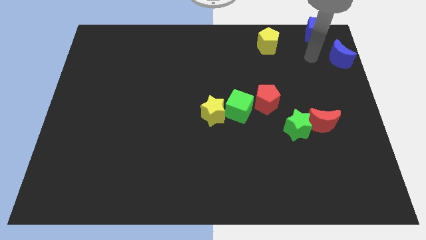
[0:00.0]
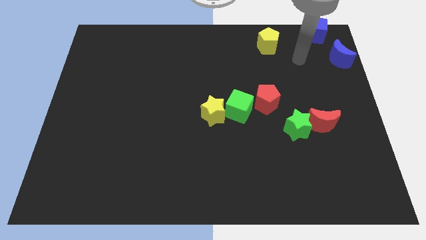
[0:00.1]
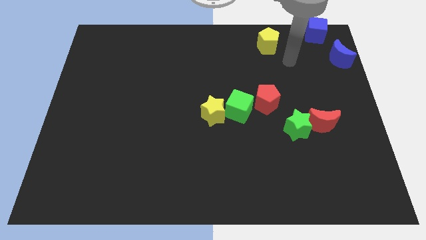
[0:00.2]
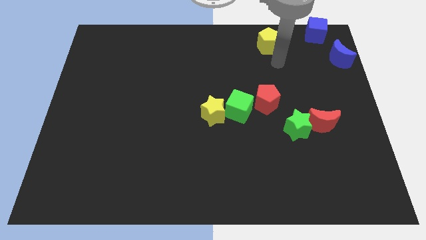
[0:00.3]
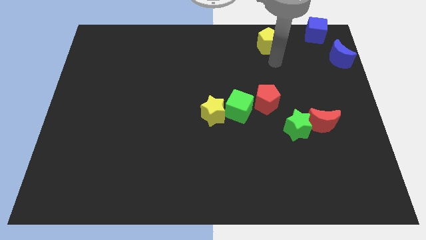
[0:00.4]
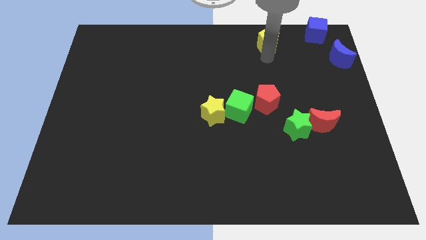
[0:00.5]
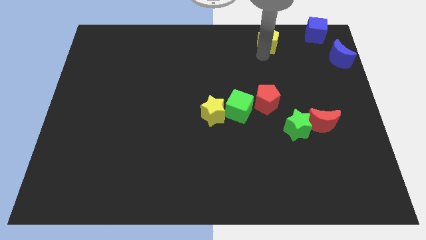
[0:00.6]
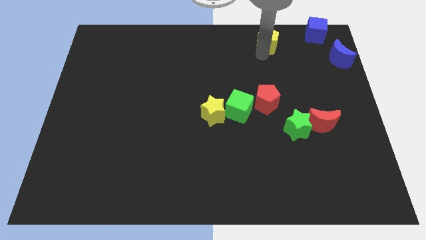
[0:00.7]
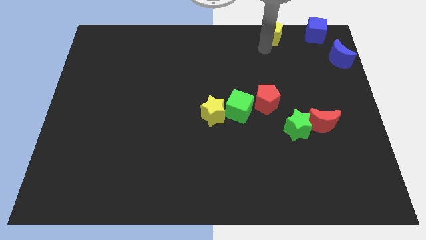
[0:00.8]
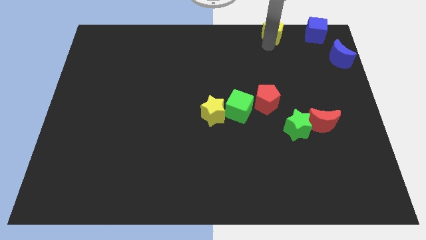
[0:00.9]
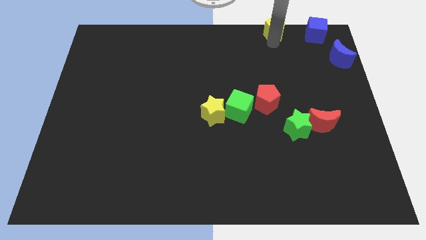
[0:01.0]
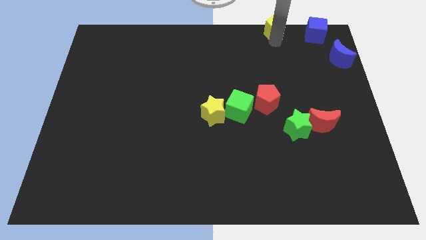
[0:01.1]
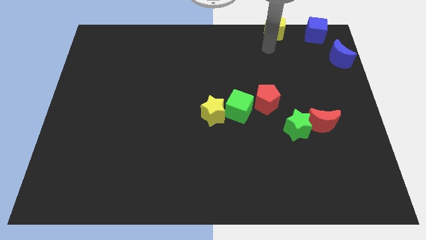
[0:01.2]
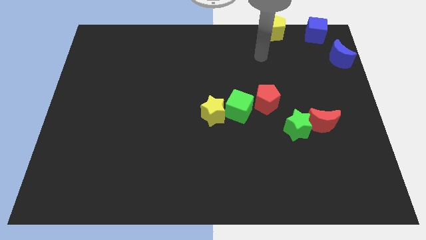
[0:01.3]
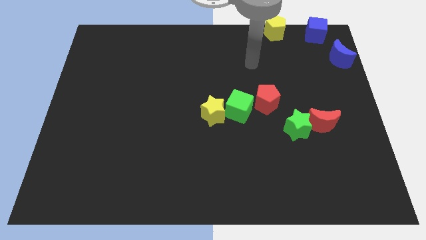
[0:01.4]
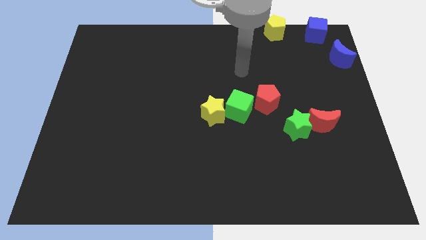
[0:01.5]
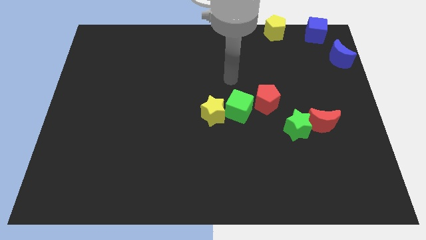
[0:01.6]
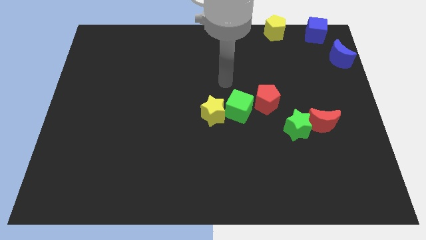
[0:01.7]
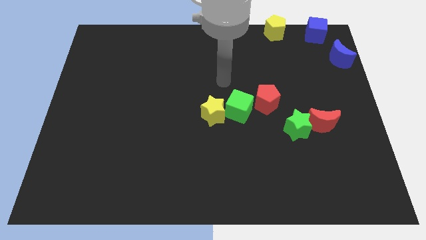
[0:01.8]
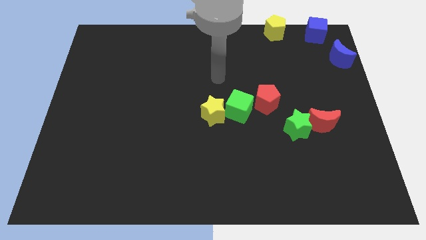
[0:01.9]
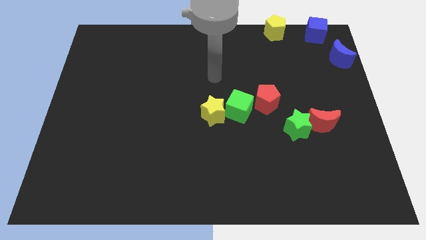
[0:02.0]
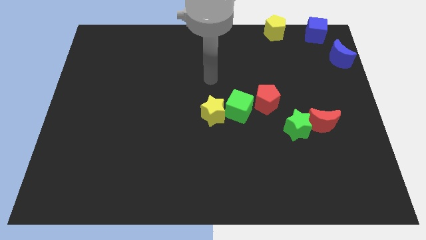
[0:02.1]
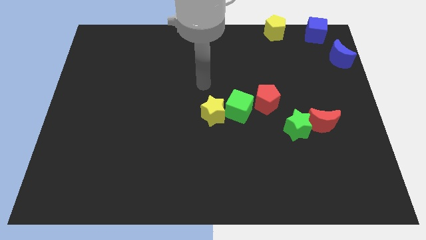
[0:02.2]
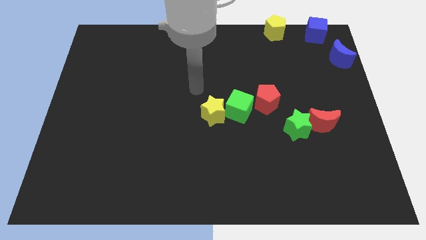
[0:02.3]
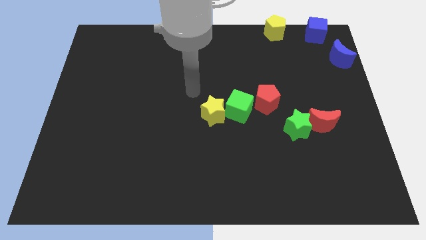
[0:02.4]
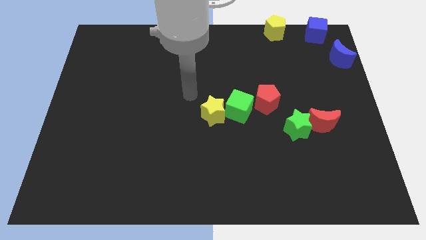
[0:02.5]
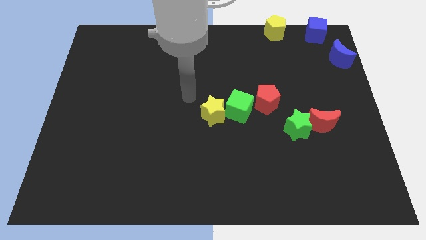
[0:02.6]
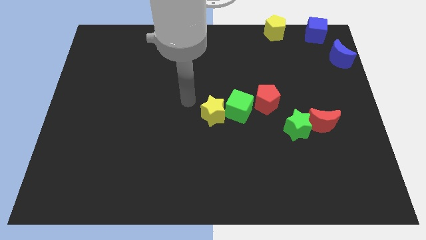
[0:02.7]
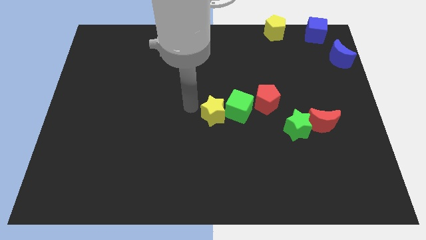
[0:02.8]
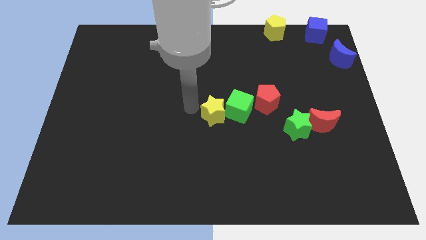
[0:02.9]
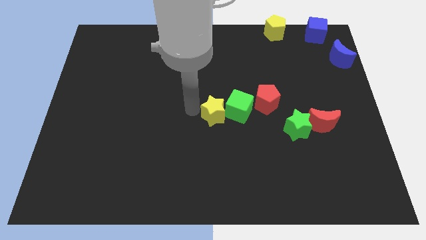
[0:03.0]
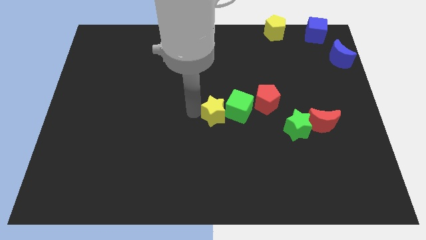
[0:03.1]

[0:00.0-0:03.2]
move your arm into the yellow star

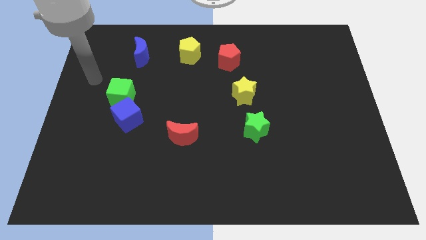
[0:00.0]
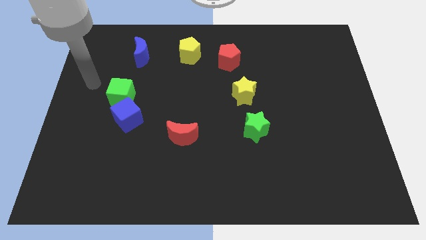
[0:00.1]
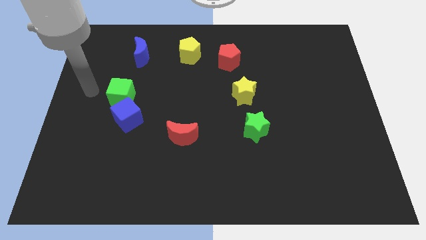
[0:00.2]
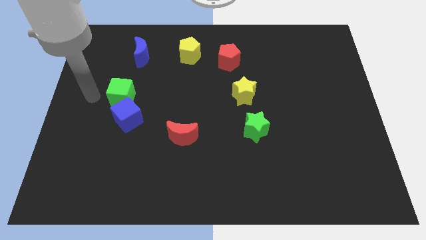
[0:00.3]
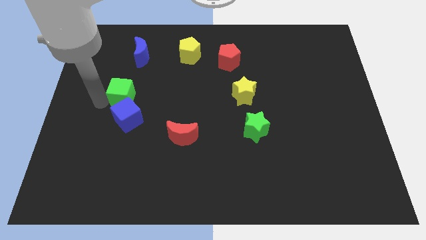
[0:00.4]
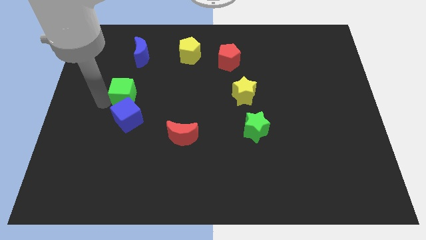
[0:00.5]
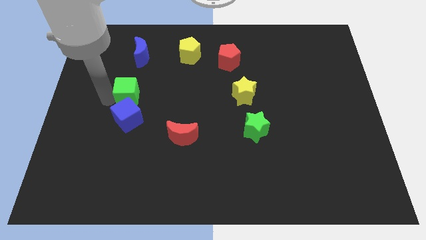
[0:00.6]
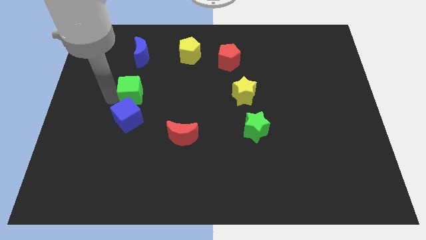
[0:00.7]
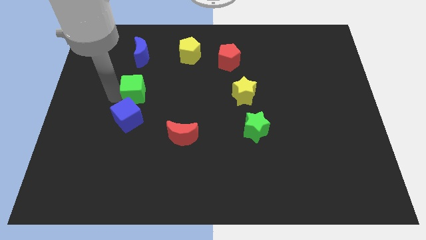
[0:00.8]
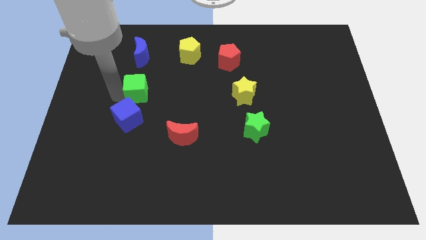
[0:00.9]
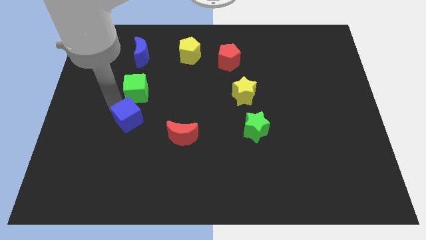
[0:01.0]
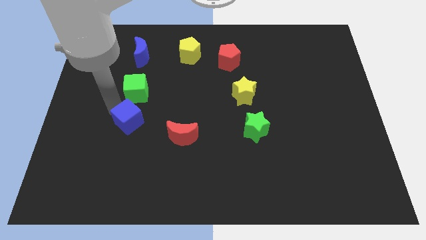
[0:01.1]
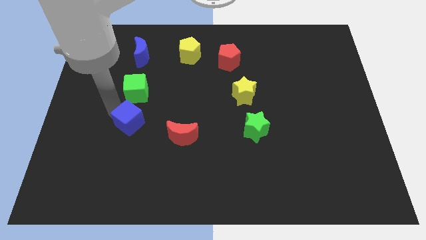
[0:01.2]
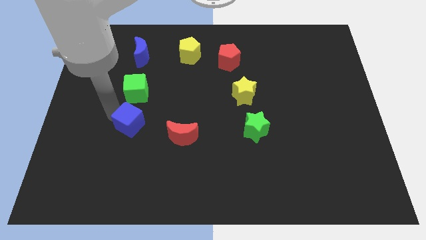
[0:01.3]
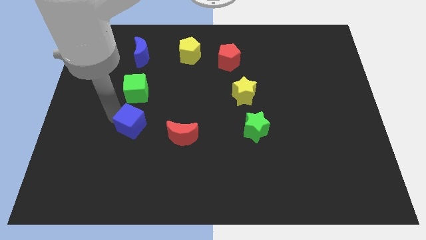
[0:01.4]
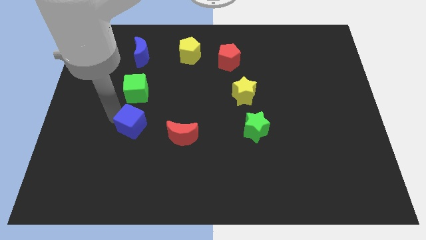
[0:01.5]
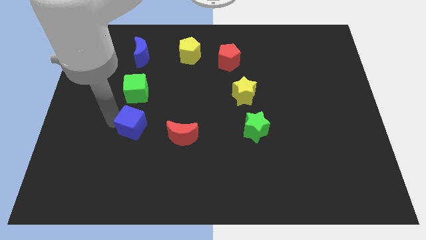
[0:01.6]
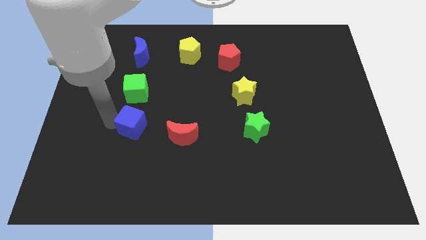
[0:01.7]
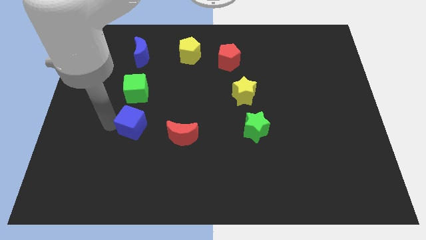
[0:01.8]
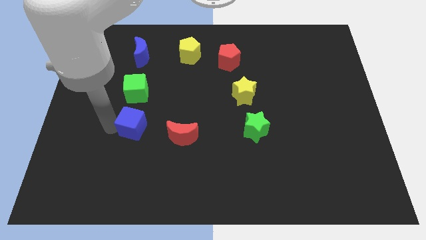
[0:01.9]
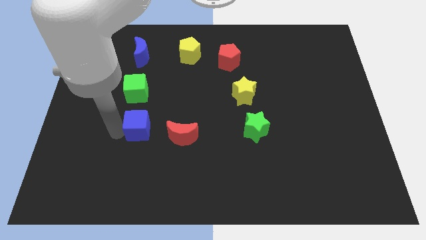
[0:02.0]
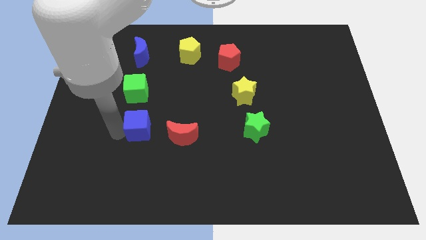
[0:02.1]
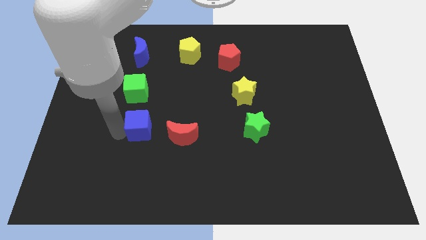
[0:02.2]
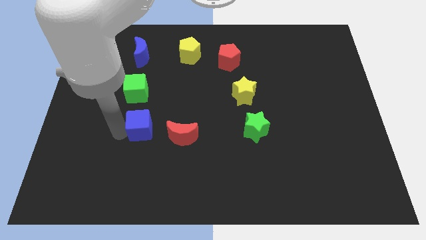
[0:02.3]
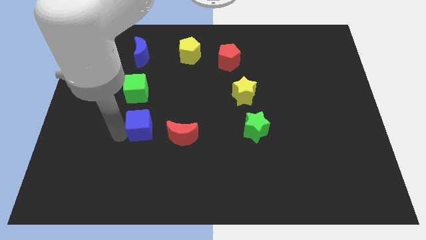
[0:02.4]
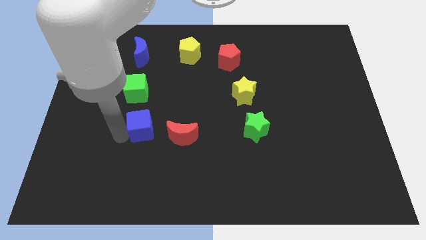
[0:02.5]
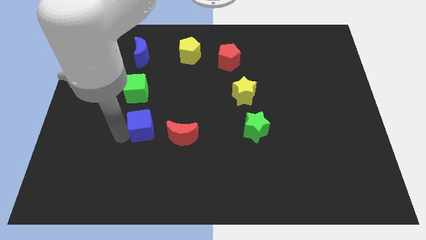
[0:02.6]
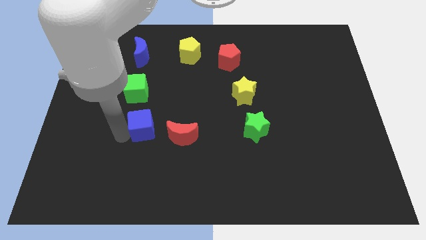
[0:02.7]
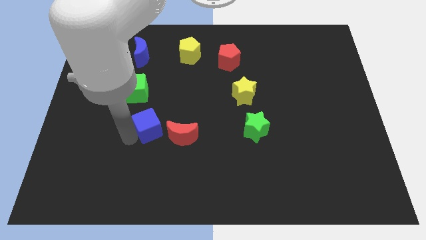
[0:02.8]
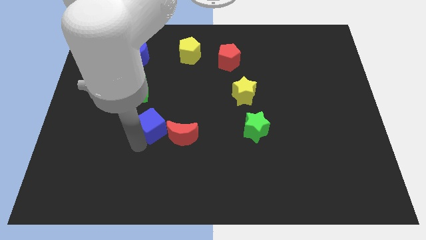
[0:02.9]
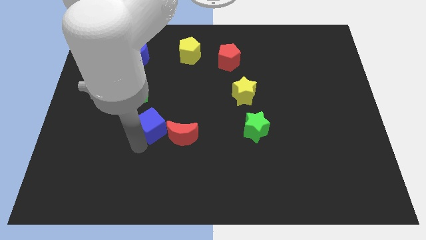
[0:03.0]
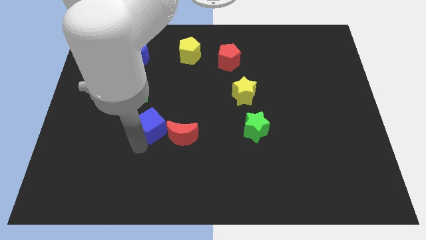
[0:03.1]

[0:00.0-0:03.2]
place the blue cube left to the red moon

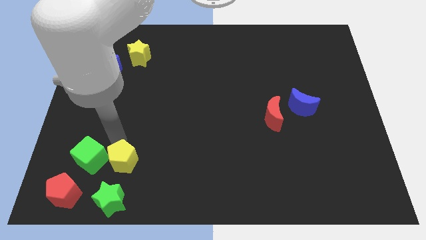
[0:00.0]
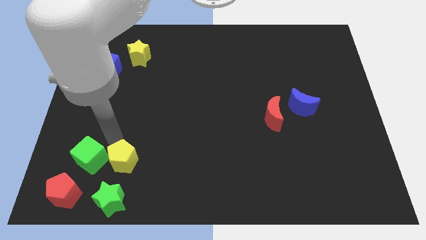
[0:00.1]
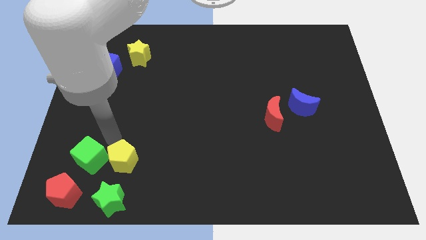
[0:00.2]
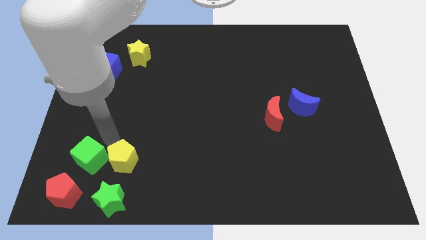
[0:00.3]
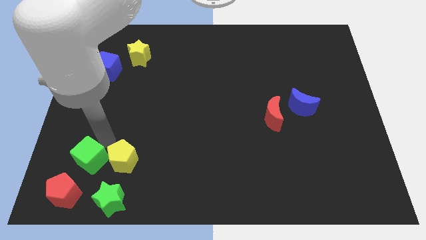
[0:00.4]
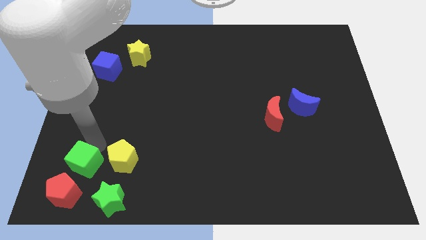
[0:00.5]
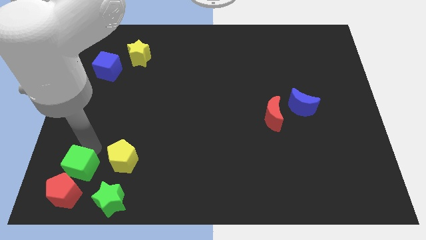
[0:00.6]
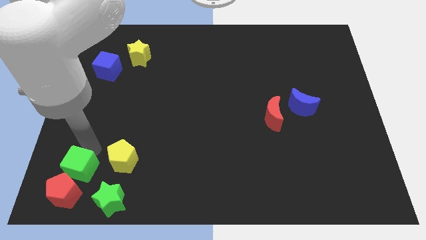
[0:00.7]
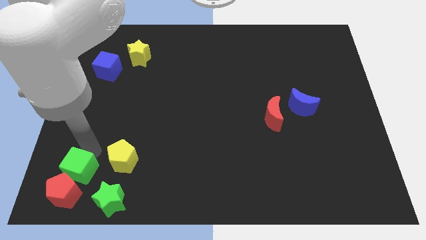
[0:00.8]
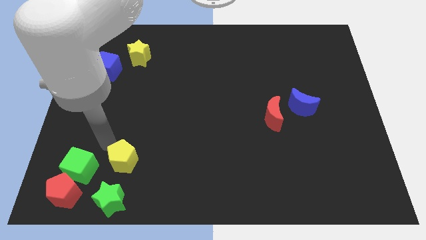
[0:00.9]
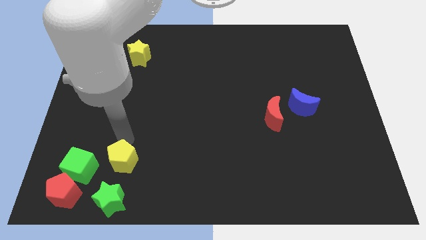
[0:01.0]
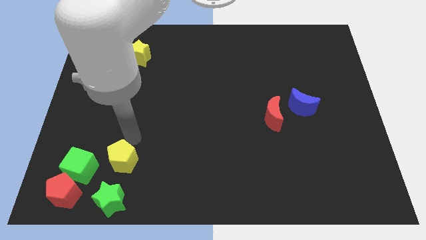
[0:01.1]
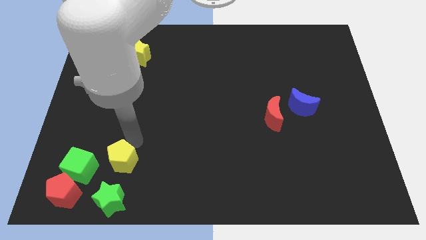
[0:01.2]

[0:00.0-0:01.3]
make the green cube touch the top side of the red pentagon

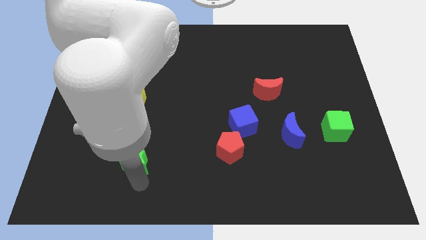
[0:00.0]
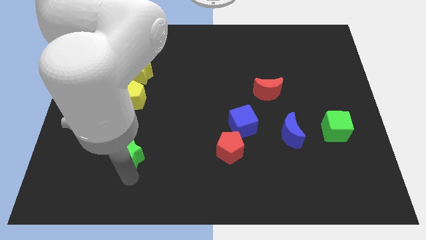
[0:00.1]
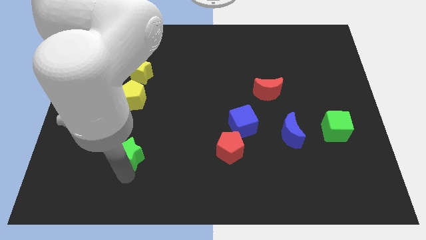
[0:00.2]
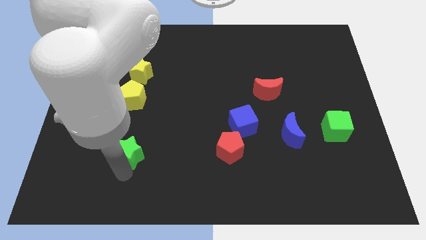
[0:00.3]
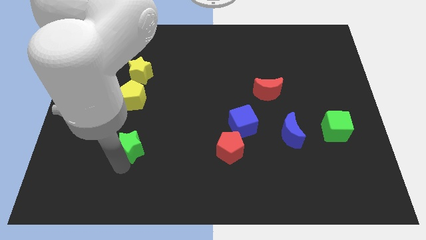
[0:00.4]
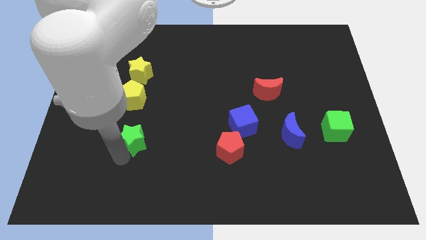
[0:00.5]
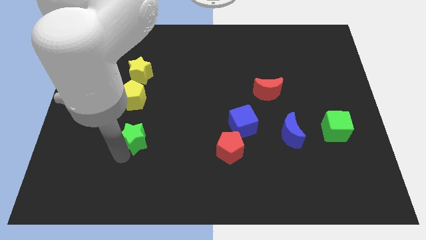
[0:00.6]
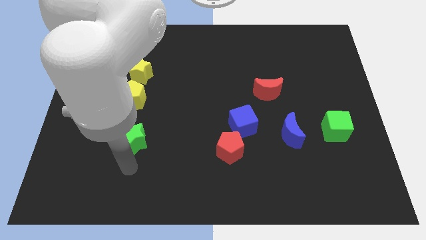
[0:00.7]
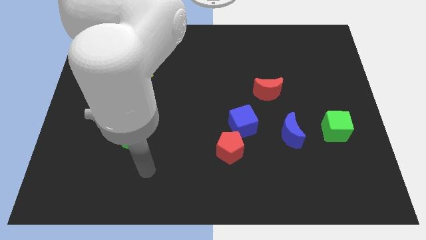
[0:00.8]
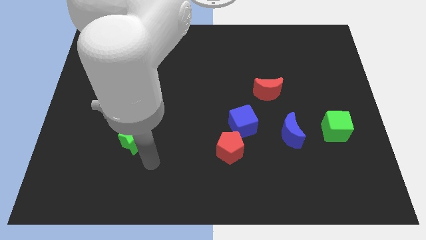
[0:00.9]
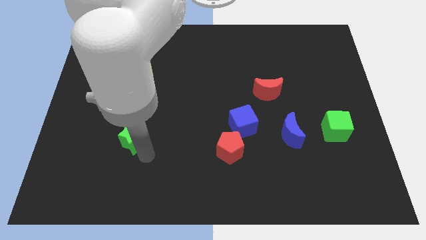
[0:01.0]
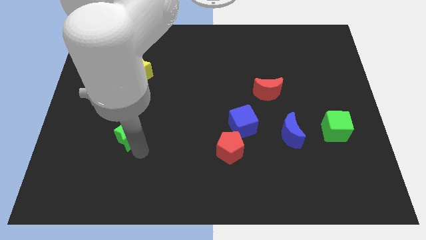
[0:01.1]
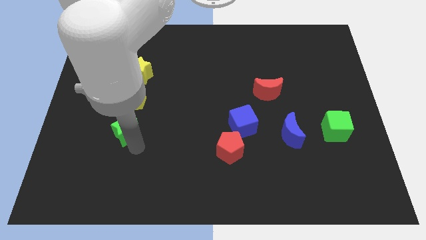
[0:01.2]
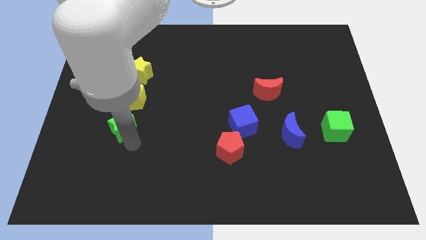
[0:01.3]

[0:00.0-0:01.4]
move the green star close to the yellow pentagon
